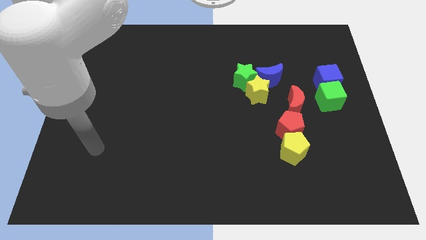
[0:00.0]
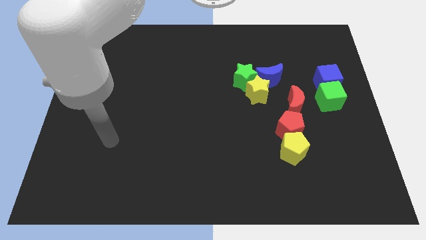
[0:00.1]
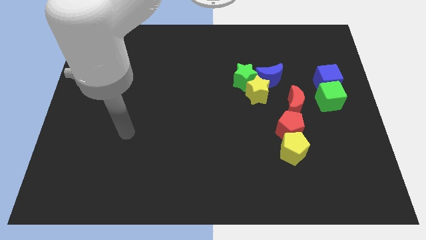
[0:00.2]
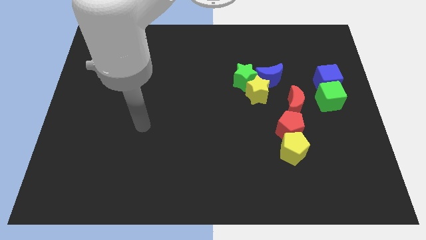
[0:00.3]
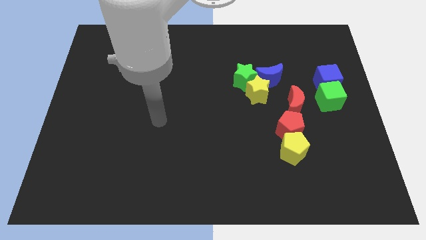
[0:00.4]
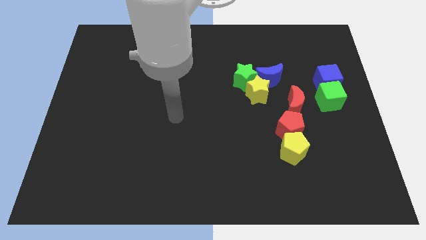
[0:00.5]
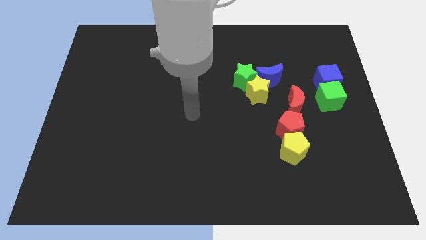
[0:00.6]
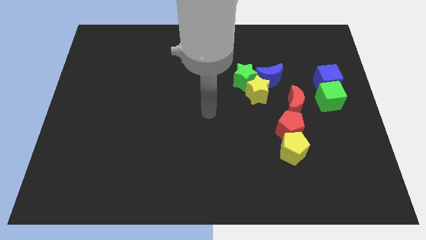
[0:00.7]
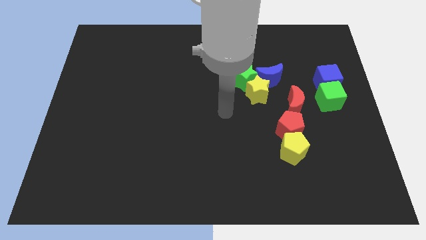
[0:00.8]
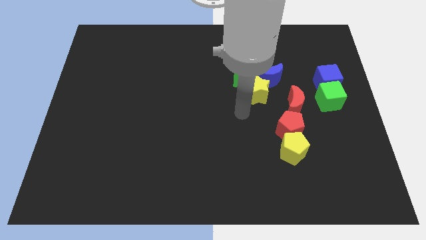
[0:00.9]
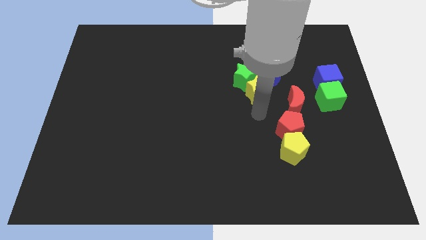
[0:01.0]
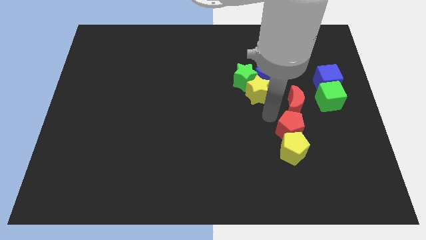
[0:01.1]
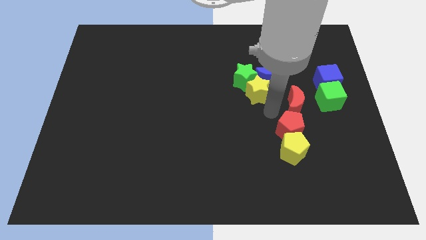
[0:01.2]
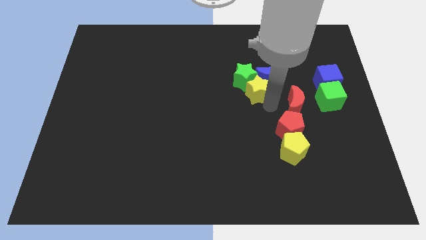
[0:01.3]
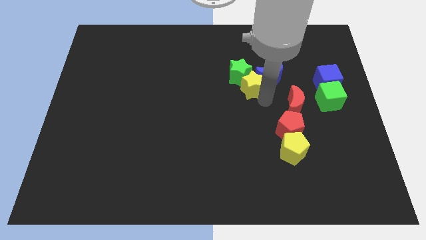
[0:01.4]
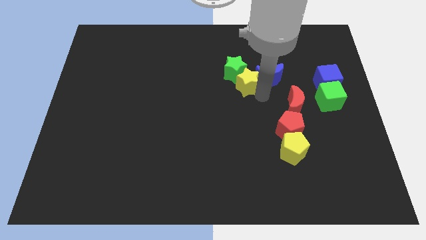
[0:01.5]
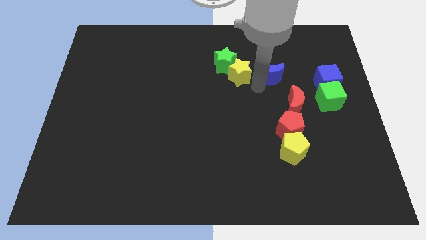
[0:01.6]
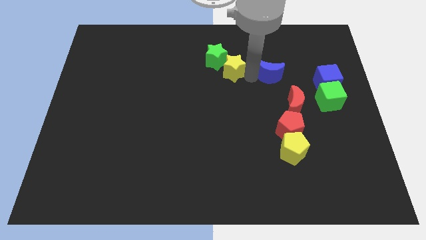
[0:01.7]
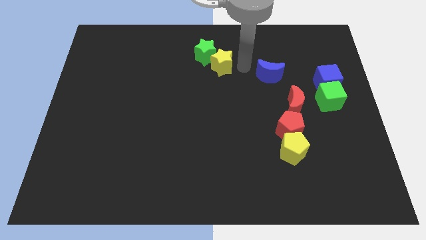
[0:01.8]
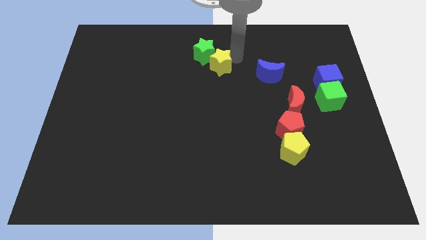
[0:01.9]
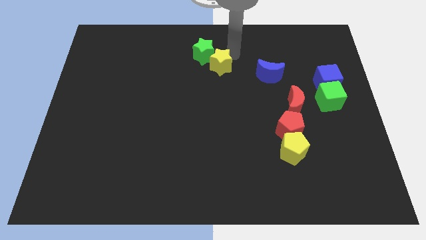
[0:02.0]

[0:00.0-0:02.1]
move the green star and the yellow star towards the top center of the board

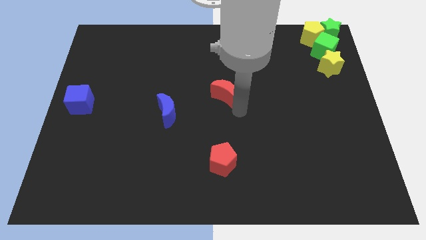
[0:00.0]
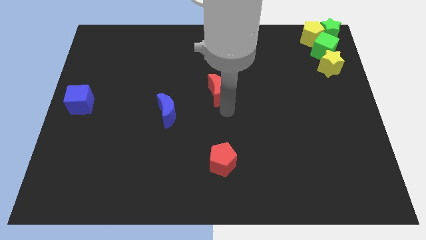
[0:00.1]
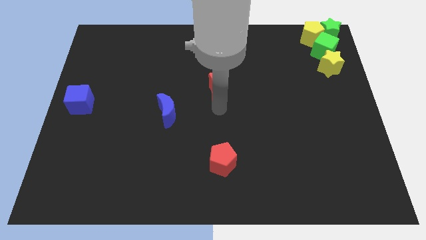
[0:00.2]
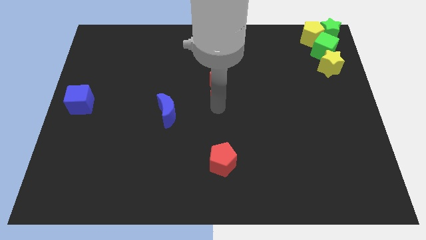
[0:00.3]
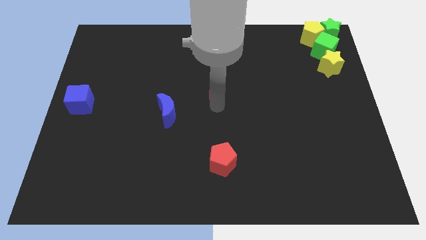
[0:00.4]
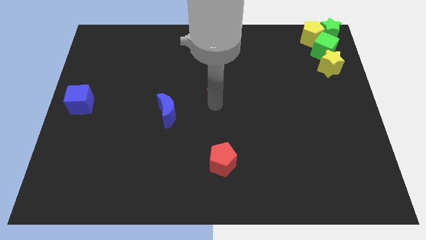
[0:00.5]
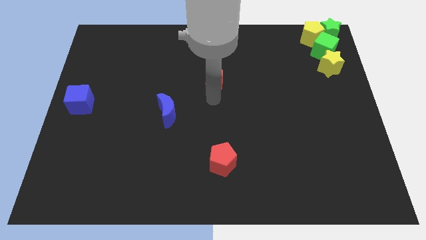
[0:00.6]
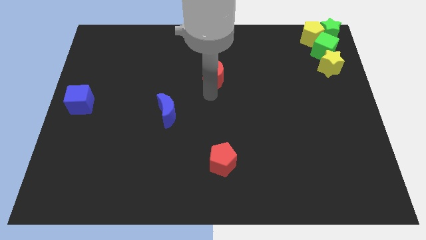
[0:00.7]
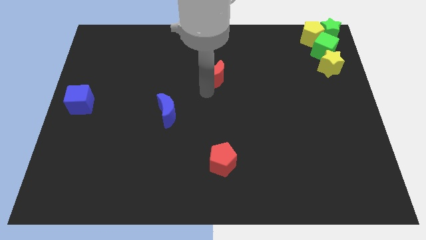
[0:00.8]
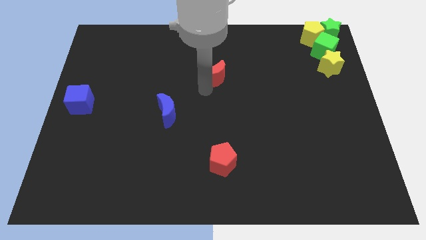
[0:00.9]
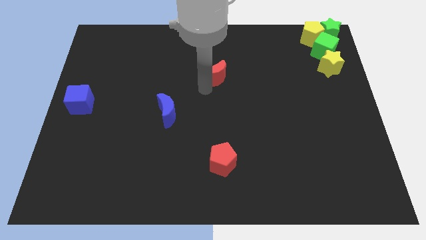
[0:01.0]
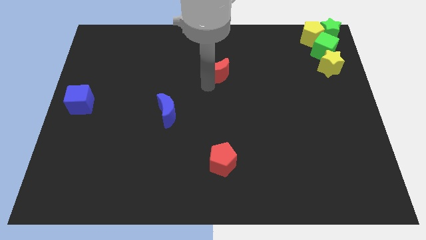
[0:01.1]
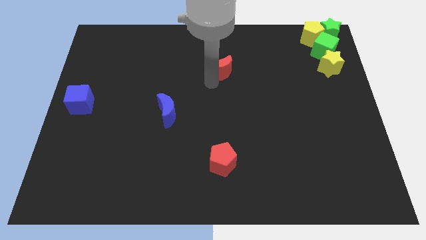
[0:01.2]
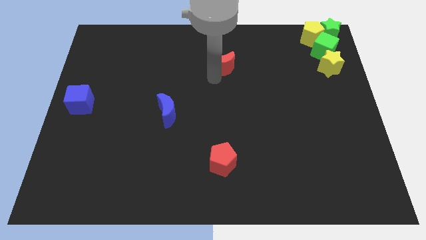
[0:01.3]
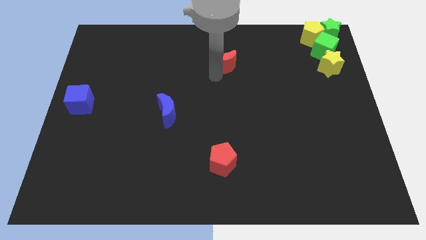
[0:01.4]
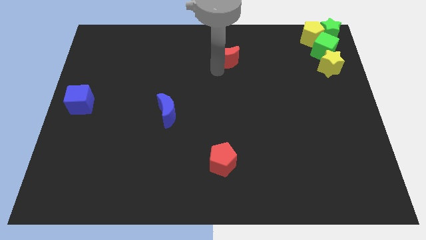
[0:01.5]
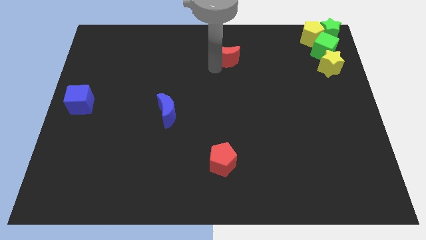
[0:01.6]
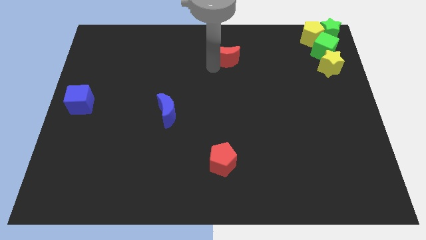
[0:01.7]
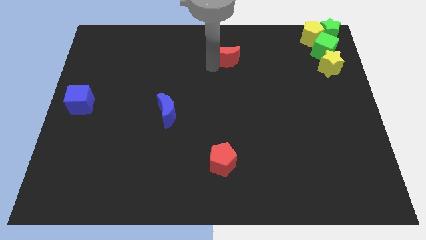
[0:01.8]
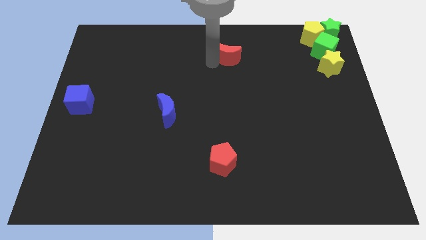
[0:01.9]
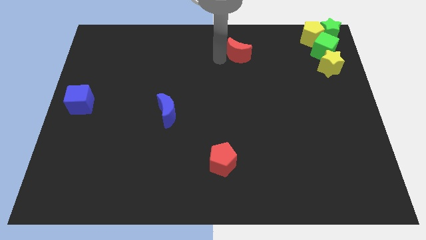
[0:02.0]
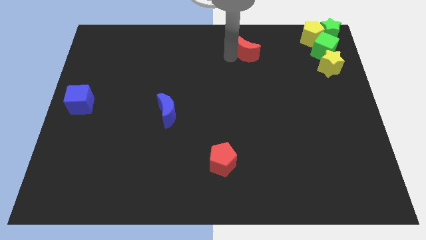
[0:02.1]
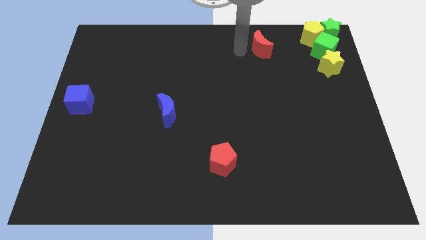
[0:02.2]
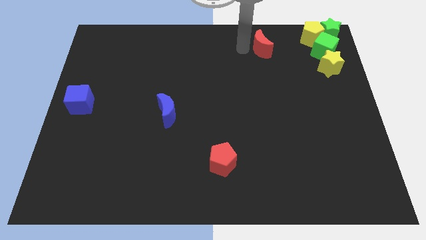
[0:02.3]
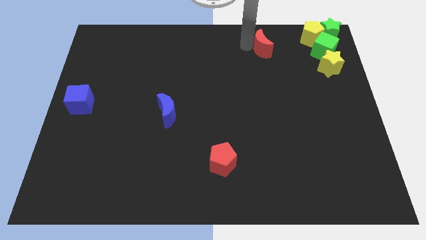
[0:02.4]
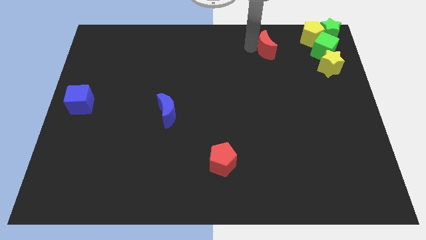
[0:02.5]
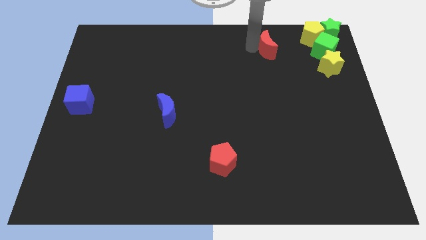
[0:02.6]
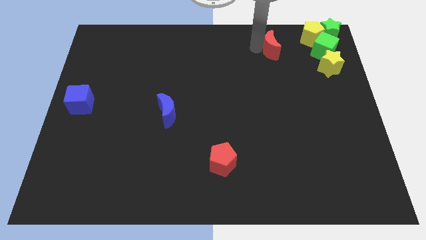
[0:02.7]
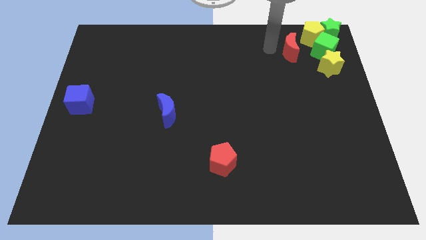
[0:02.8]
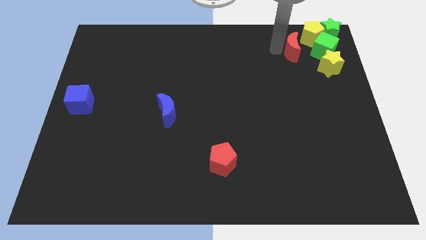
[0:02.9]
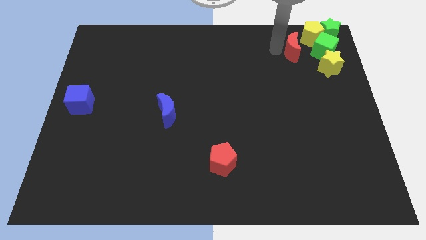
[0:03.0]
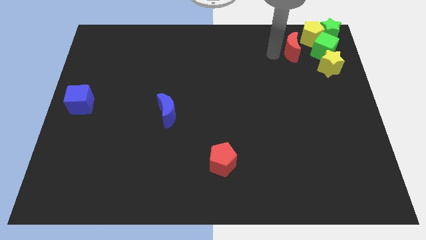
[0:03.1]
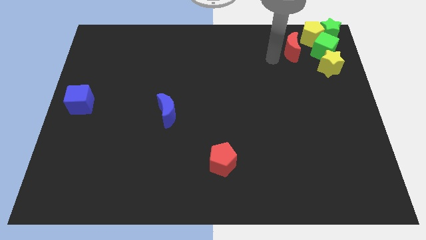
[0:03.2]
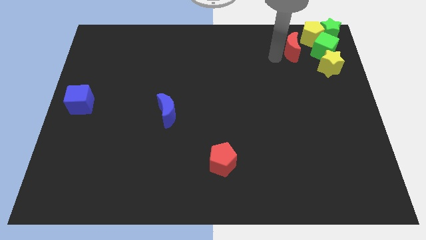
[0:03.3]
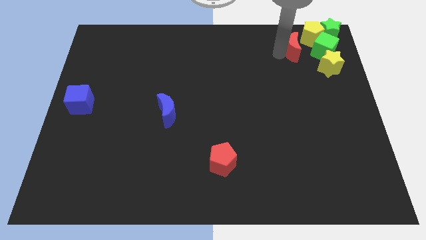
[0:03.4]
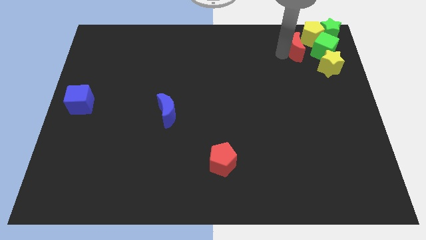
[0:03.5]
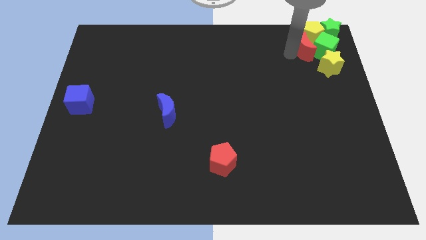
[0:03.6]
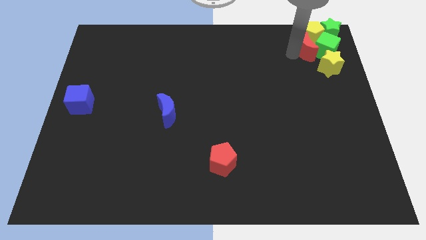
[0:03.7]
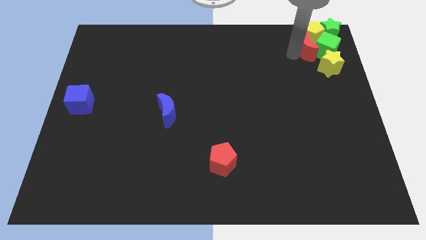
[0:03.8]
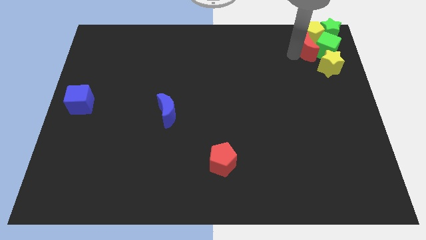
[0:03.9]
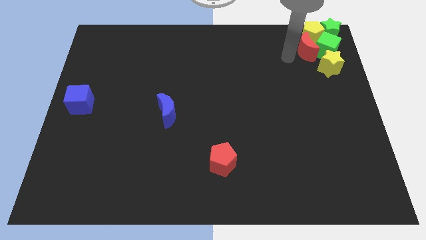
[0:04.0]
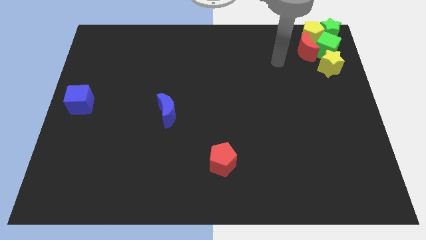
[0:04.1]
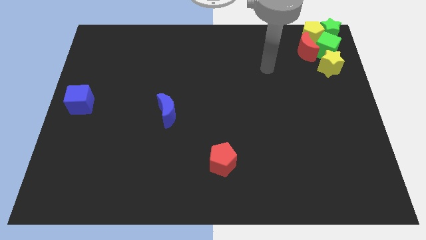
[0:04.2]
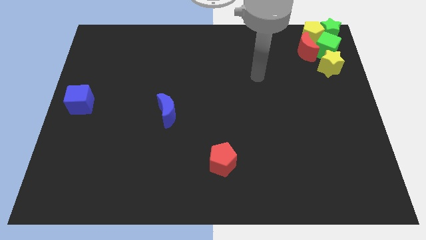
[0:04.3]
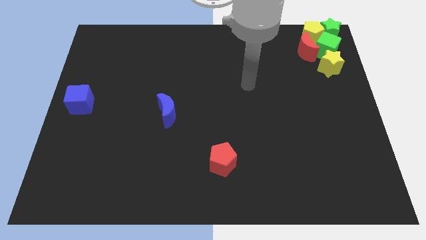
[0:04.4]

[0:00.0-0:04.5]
push the red moon into the group of blocks

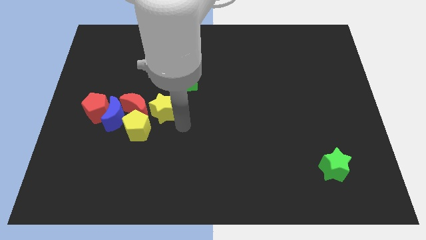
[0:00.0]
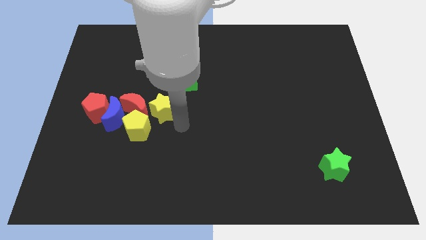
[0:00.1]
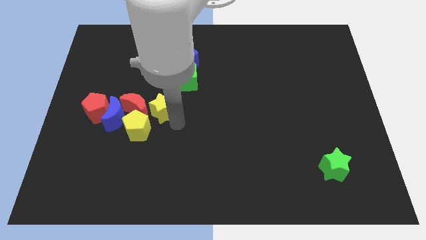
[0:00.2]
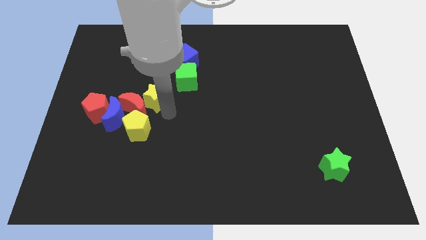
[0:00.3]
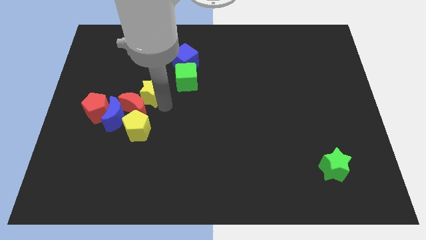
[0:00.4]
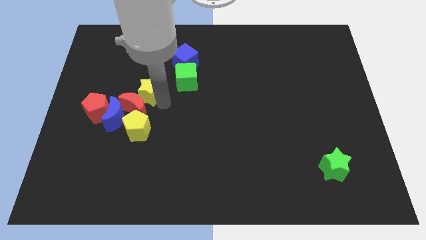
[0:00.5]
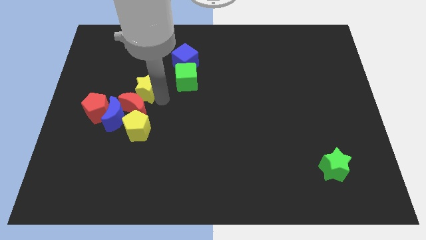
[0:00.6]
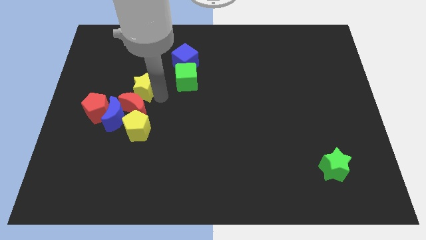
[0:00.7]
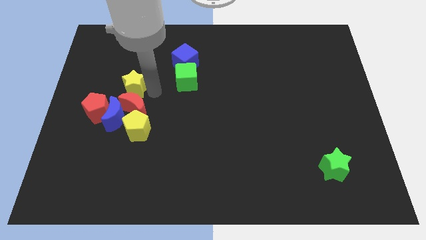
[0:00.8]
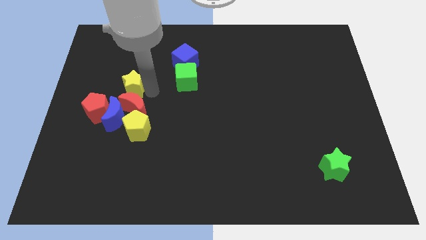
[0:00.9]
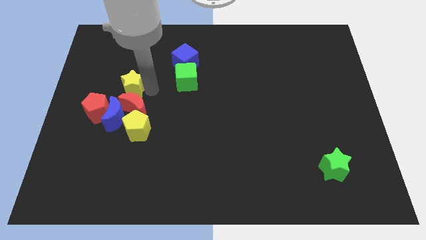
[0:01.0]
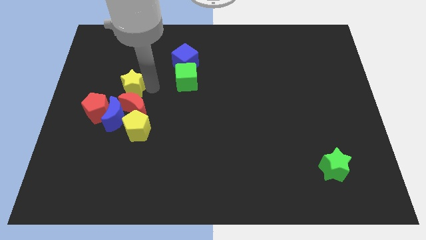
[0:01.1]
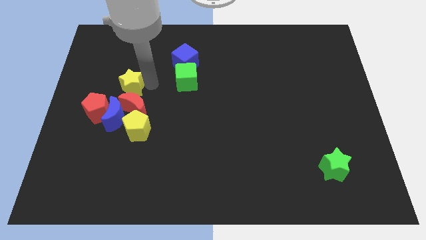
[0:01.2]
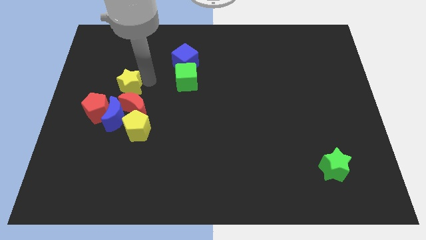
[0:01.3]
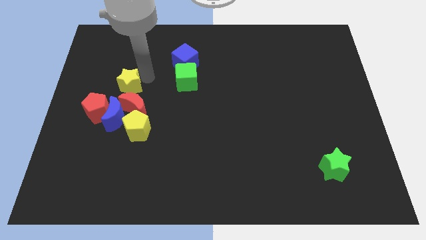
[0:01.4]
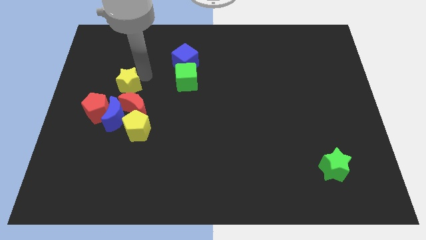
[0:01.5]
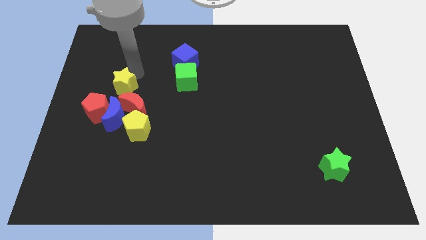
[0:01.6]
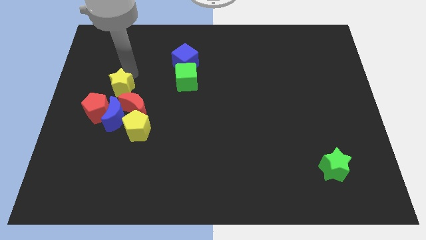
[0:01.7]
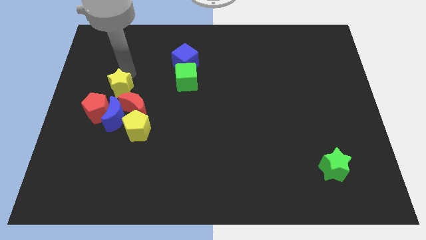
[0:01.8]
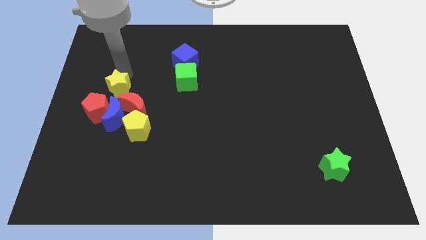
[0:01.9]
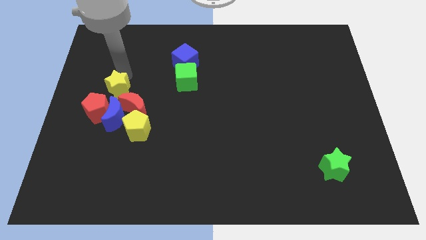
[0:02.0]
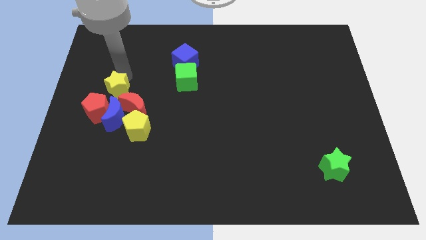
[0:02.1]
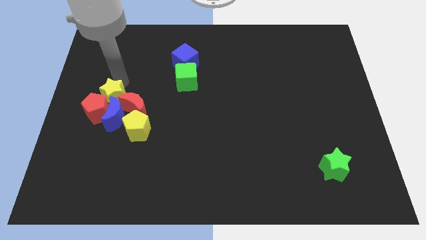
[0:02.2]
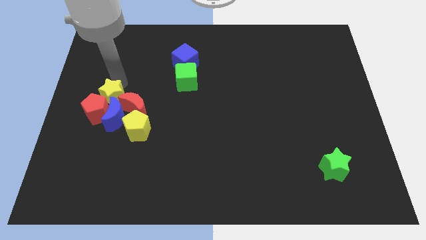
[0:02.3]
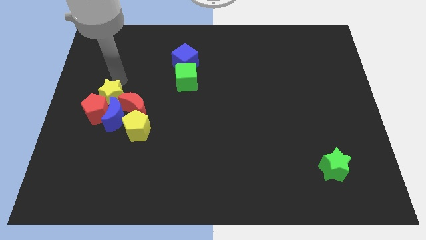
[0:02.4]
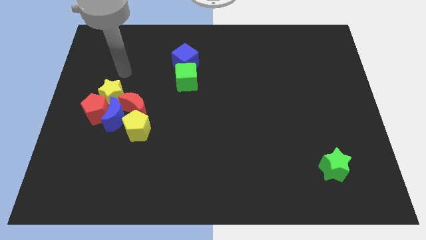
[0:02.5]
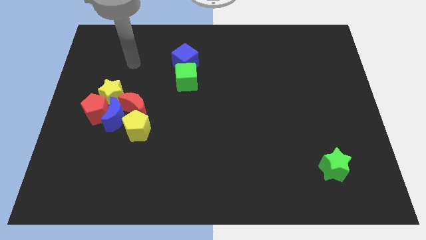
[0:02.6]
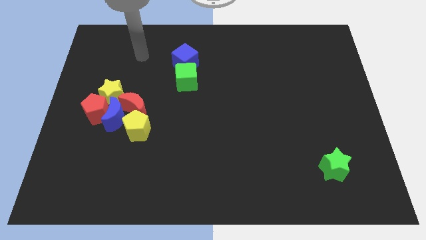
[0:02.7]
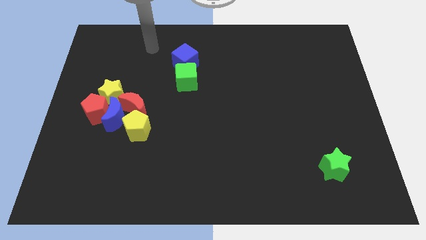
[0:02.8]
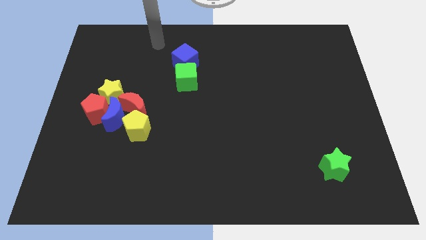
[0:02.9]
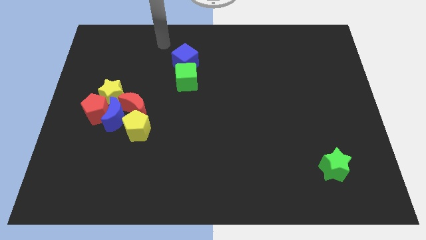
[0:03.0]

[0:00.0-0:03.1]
push the yellow star into the group of blocks
